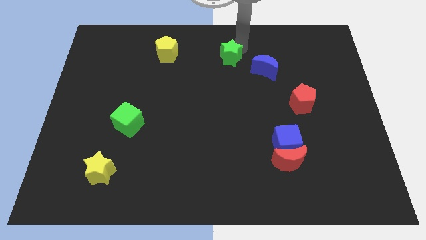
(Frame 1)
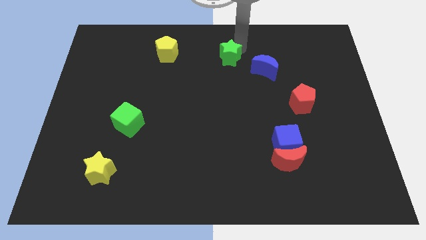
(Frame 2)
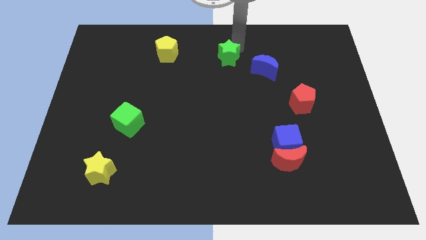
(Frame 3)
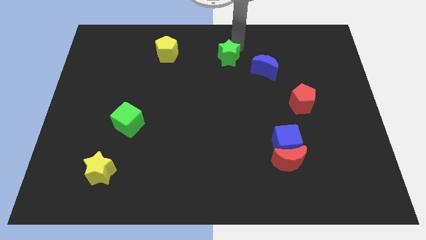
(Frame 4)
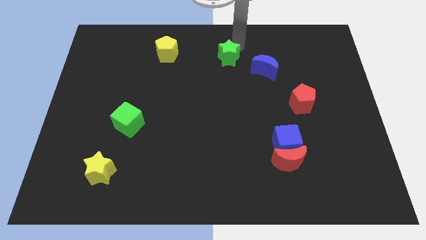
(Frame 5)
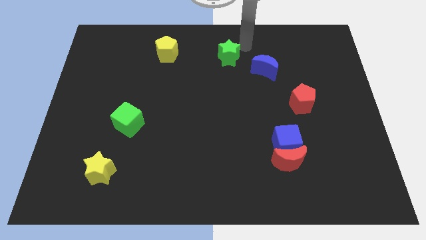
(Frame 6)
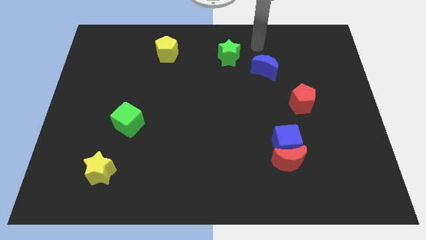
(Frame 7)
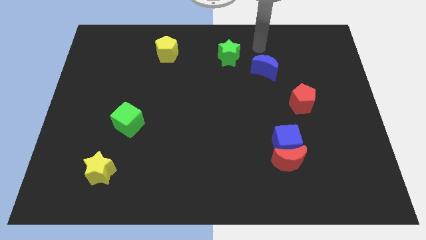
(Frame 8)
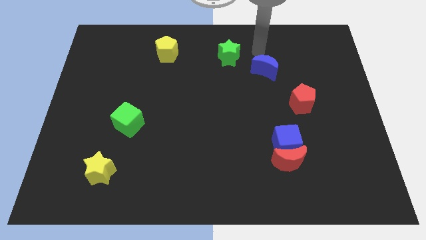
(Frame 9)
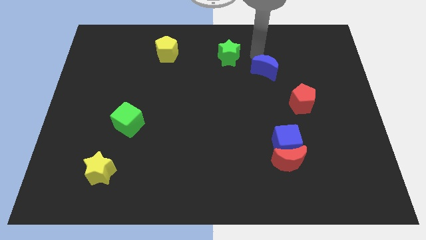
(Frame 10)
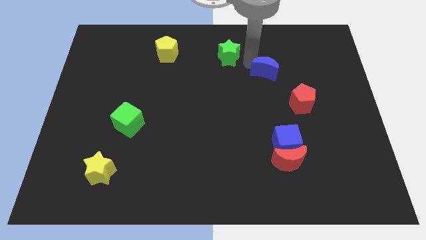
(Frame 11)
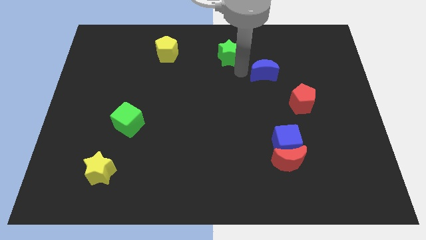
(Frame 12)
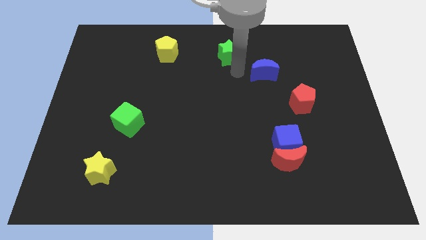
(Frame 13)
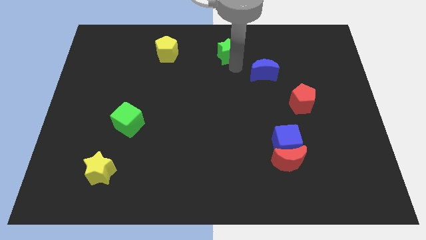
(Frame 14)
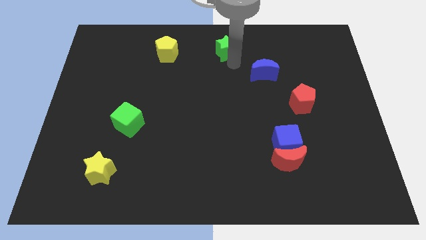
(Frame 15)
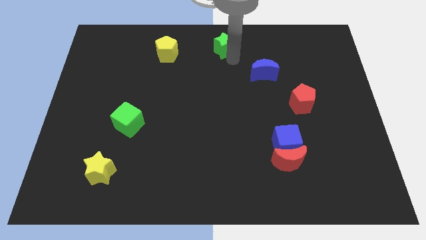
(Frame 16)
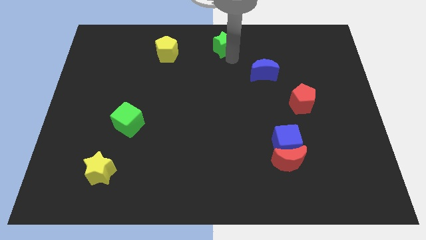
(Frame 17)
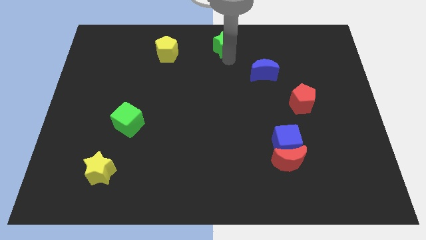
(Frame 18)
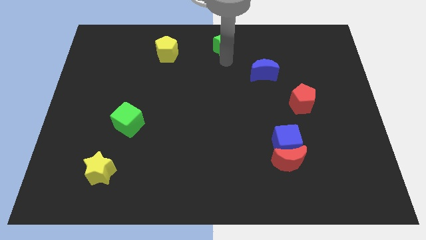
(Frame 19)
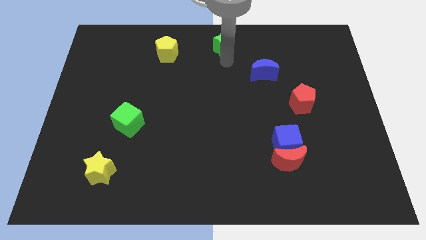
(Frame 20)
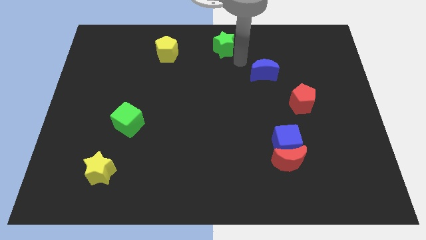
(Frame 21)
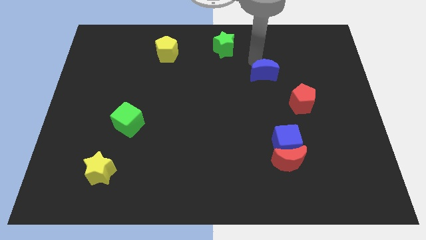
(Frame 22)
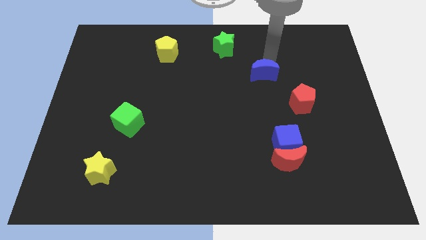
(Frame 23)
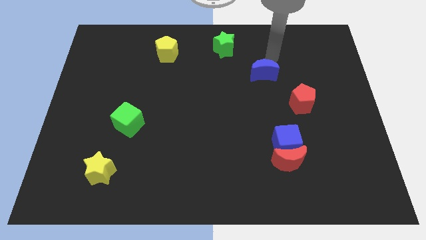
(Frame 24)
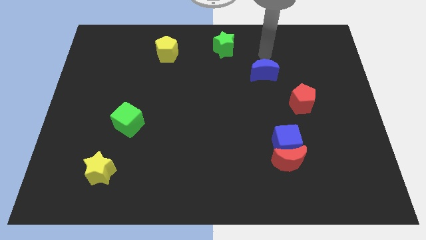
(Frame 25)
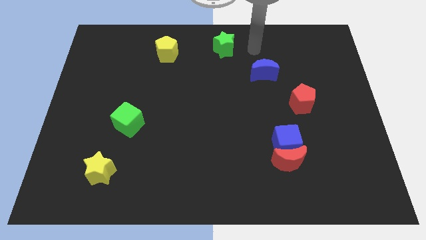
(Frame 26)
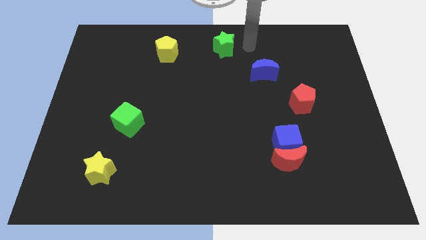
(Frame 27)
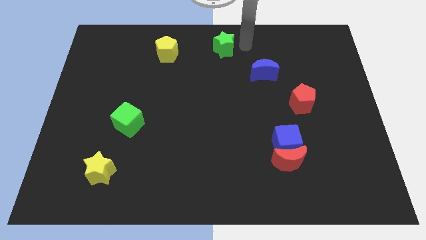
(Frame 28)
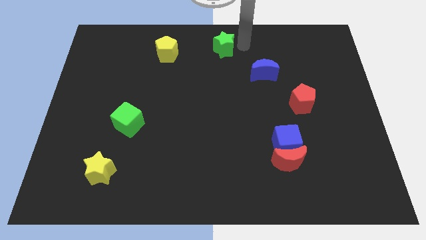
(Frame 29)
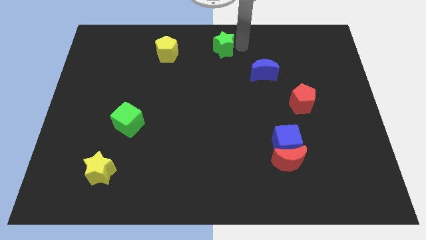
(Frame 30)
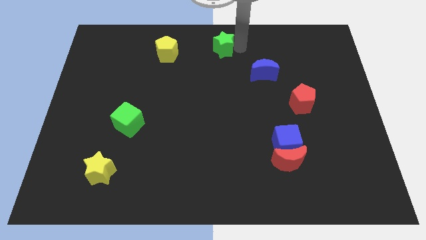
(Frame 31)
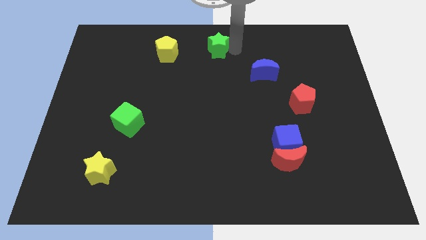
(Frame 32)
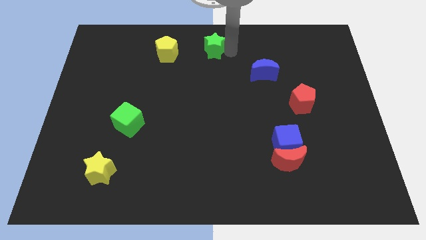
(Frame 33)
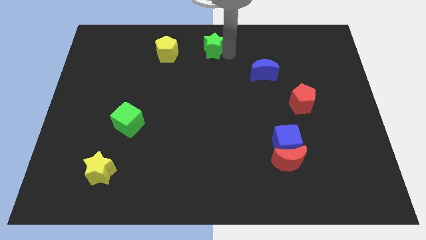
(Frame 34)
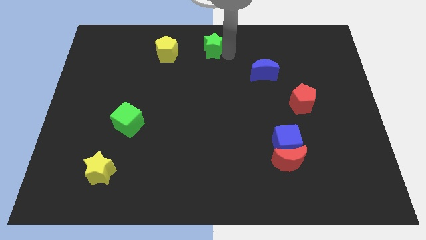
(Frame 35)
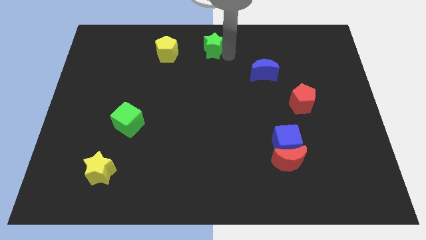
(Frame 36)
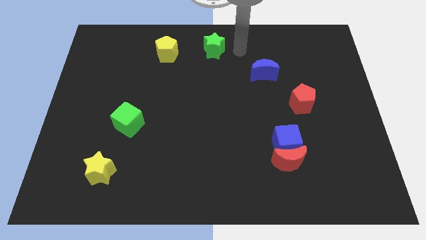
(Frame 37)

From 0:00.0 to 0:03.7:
place the green star at top center of the board

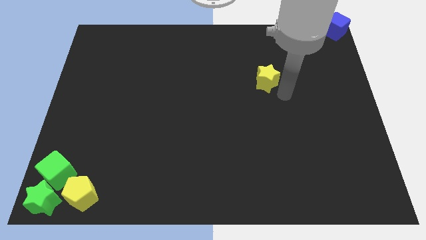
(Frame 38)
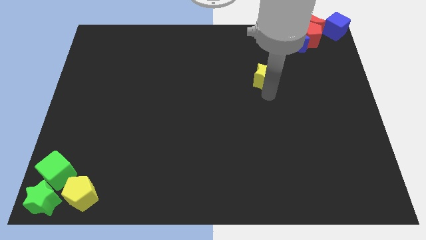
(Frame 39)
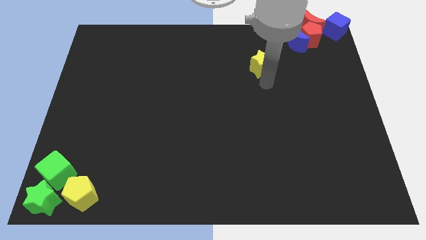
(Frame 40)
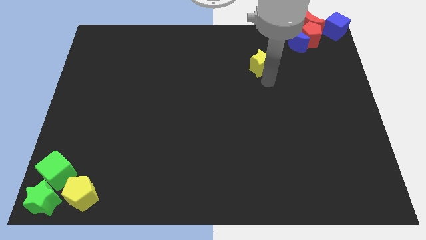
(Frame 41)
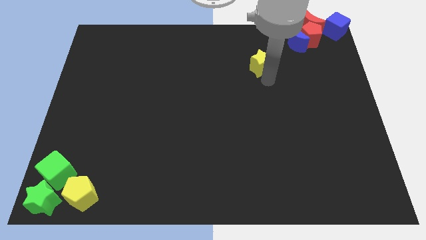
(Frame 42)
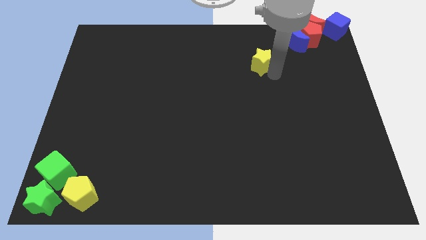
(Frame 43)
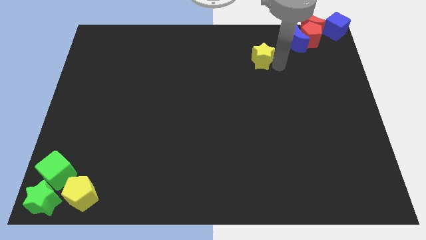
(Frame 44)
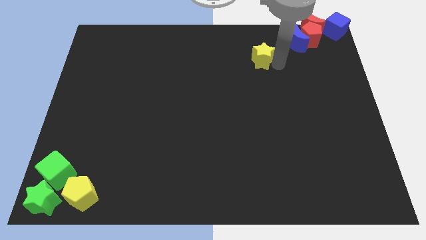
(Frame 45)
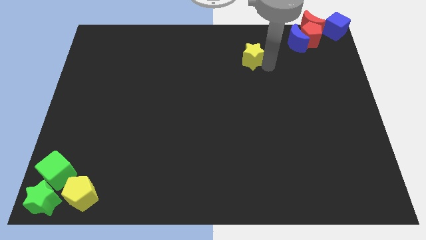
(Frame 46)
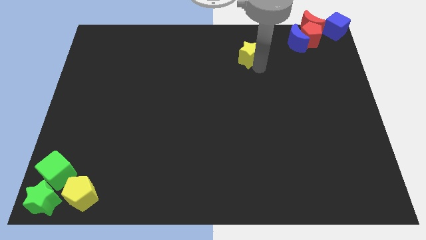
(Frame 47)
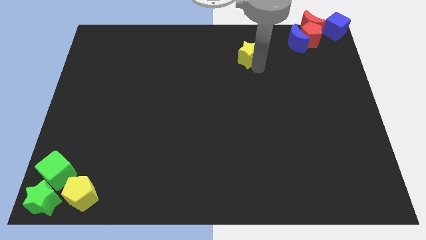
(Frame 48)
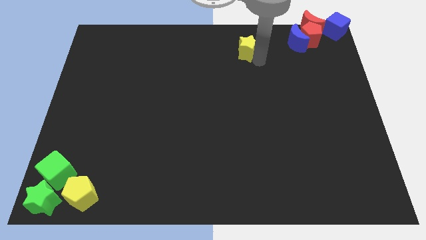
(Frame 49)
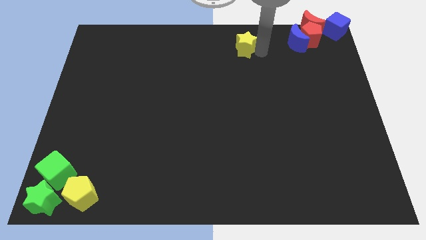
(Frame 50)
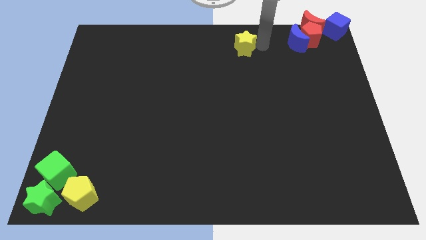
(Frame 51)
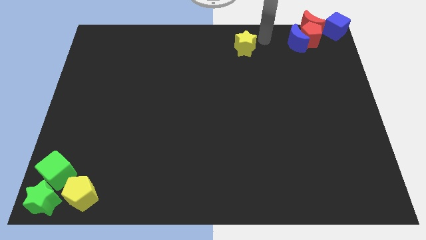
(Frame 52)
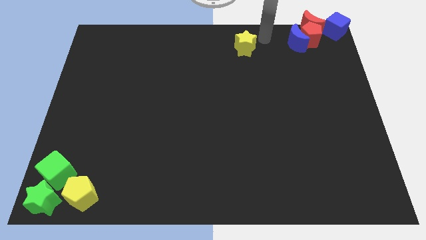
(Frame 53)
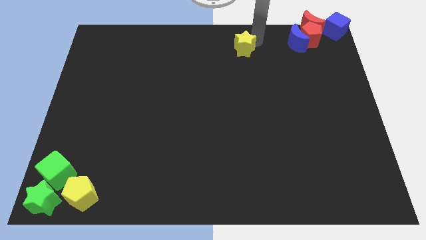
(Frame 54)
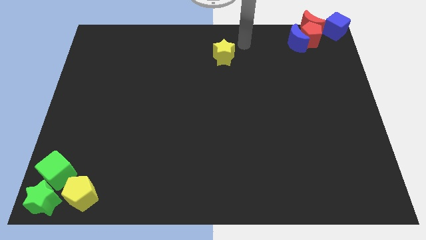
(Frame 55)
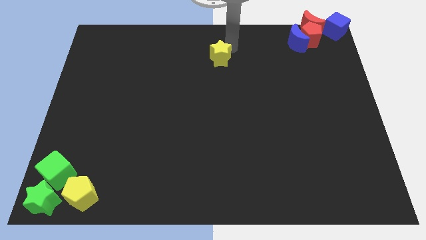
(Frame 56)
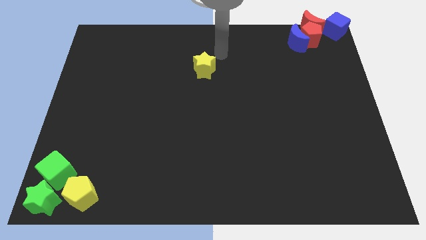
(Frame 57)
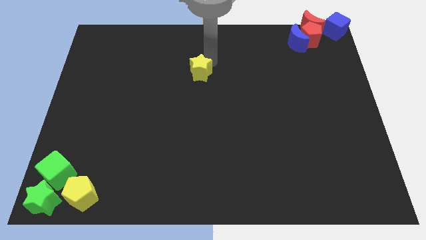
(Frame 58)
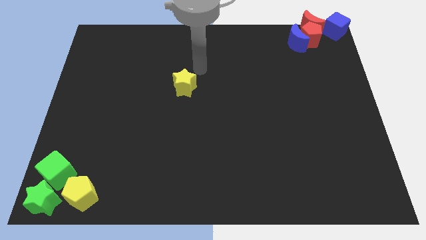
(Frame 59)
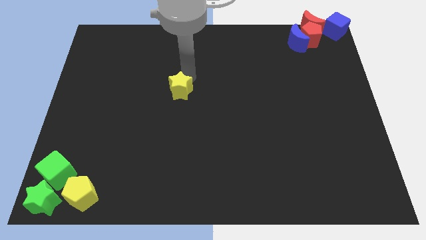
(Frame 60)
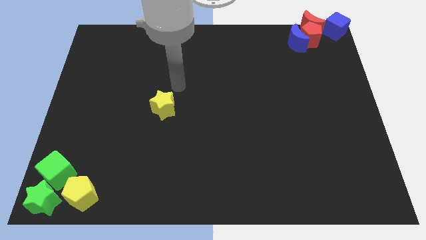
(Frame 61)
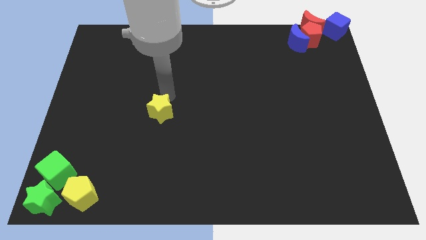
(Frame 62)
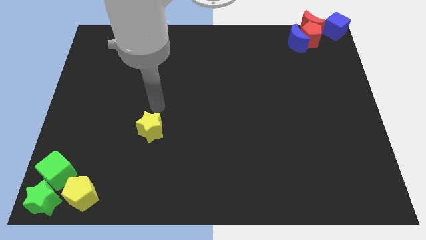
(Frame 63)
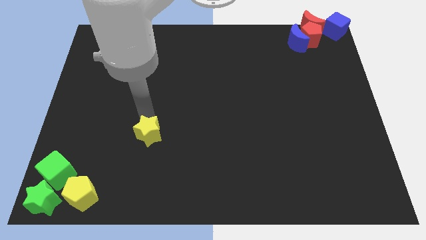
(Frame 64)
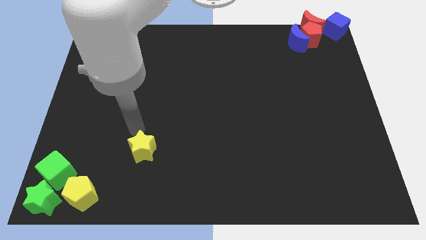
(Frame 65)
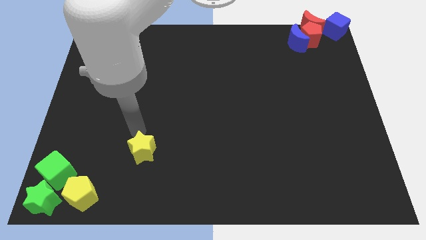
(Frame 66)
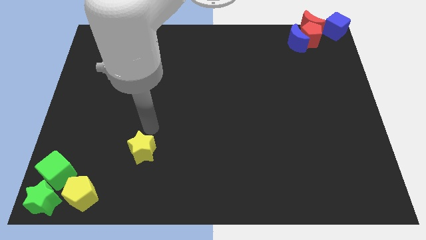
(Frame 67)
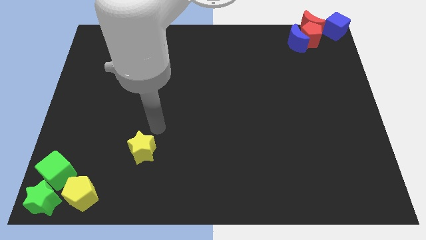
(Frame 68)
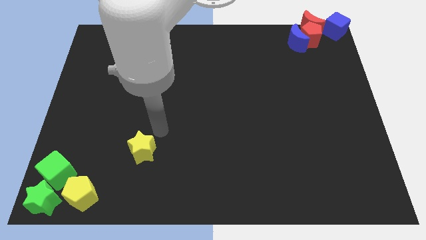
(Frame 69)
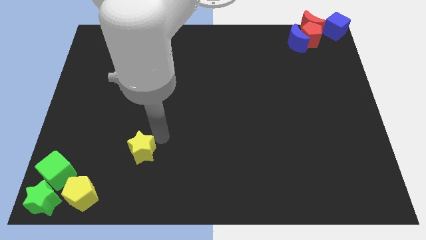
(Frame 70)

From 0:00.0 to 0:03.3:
put the yellow star diagonally on the top right side of the yellow pentagon

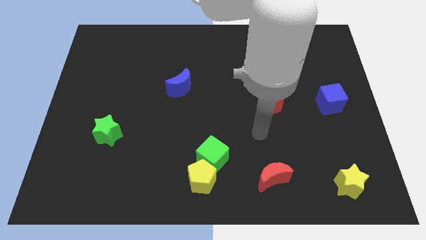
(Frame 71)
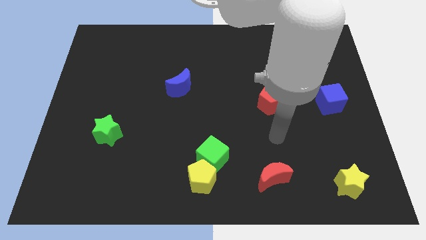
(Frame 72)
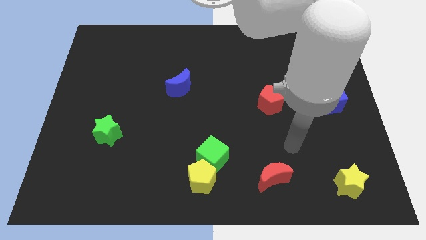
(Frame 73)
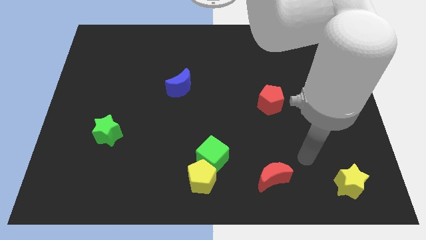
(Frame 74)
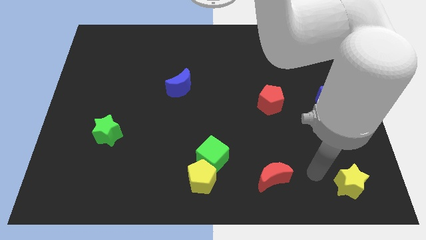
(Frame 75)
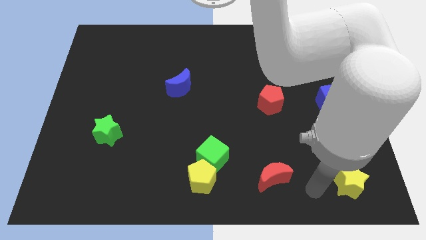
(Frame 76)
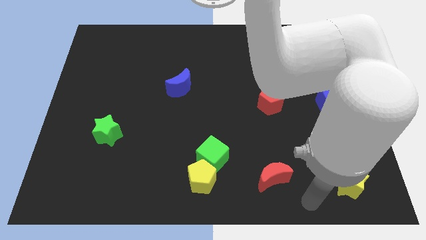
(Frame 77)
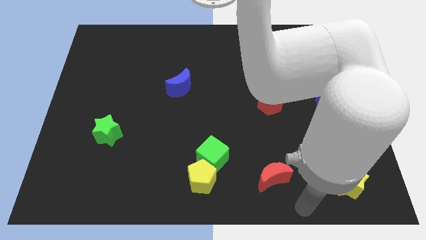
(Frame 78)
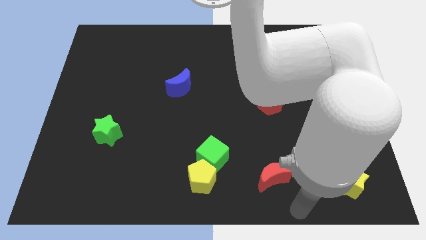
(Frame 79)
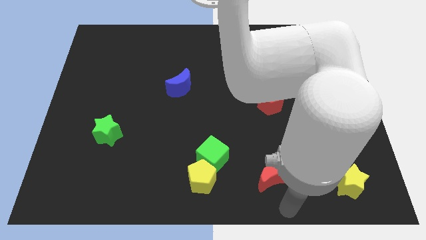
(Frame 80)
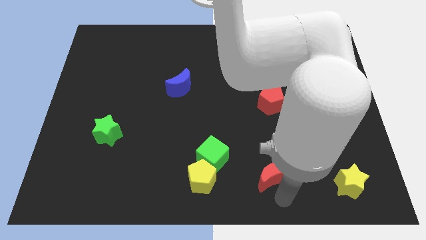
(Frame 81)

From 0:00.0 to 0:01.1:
place your arm in front of the red crescent

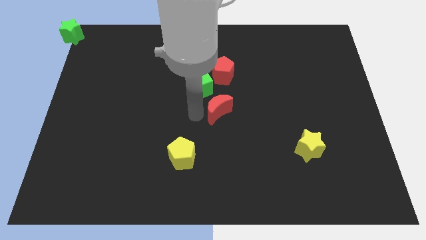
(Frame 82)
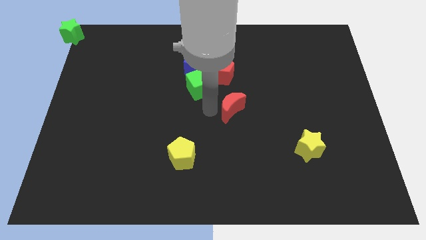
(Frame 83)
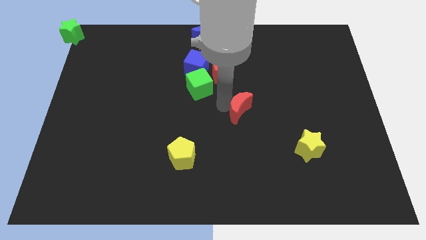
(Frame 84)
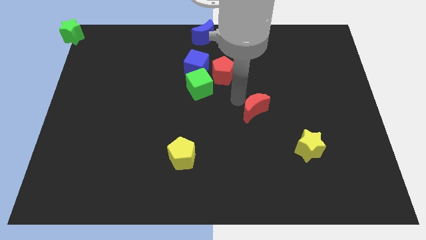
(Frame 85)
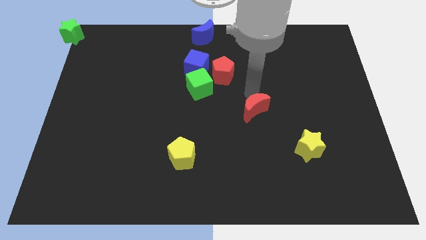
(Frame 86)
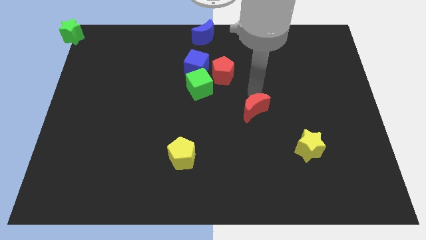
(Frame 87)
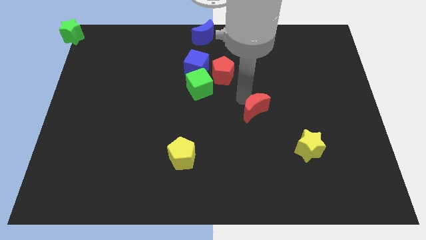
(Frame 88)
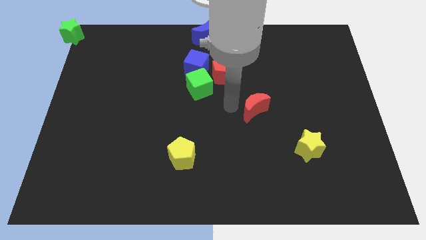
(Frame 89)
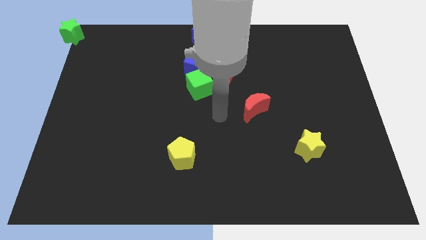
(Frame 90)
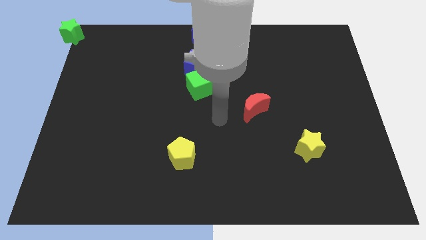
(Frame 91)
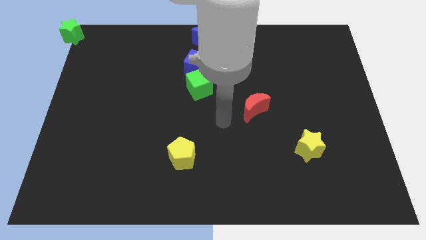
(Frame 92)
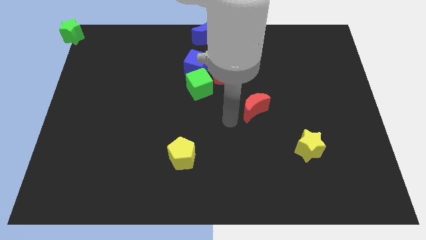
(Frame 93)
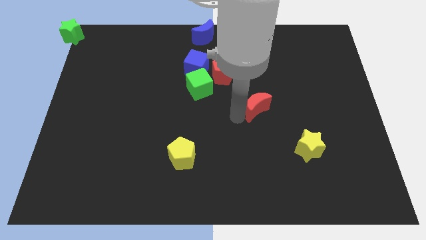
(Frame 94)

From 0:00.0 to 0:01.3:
move the red crescent to the right side of the board
